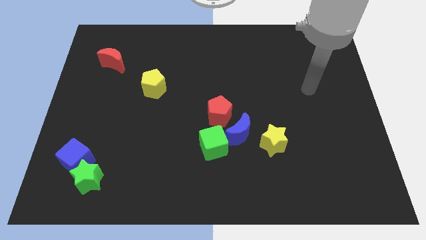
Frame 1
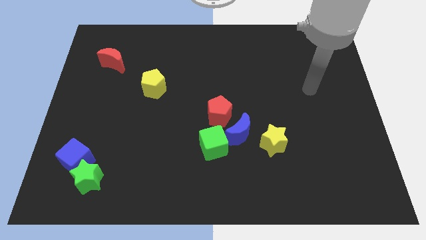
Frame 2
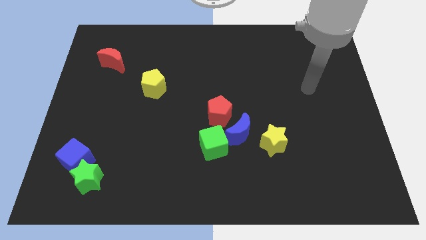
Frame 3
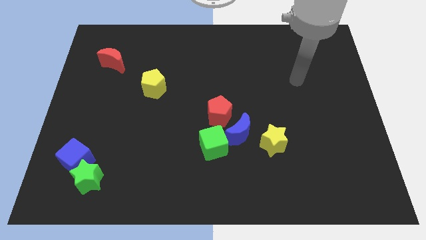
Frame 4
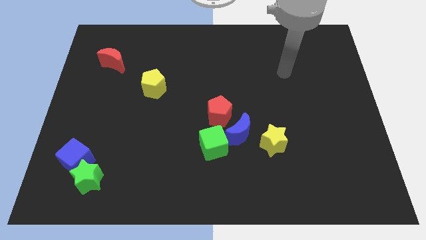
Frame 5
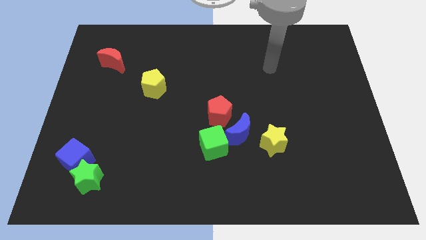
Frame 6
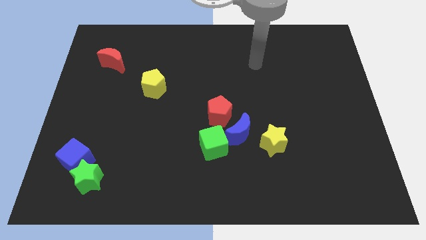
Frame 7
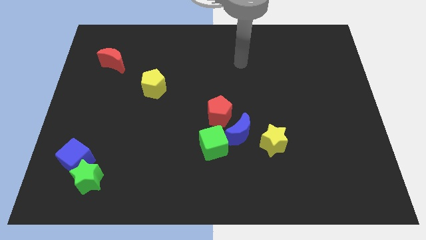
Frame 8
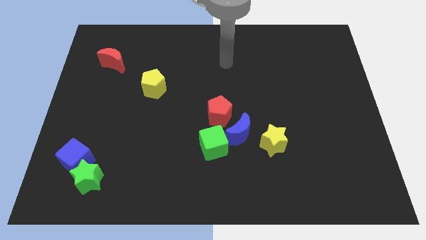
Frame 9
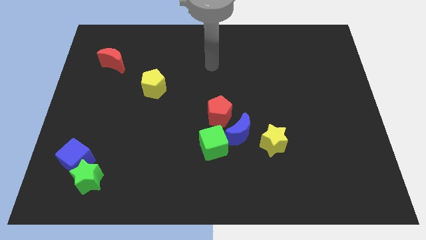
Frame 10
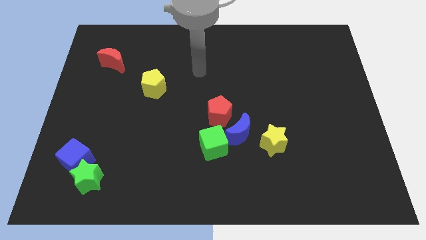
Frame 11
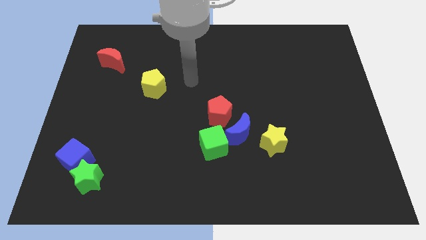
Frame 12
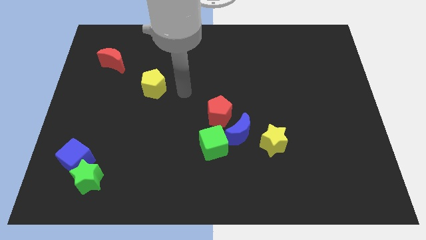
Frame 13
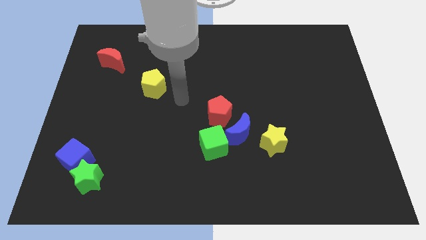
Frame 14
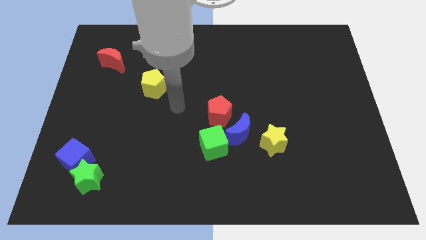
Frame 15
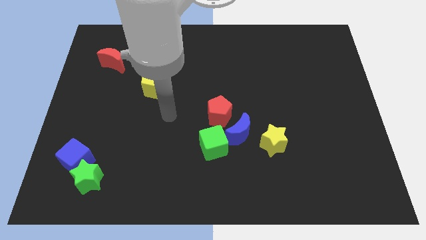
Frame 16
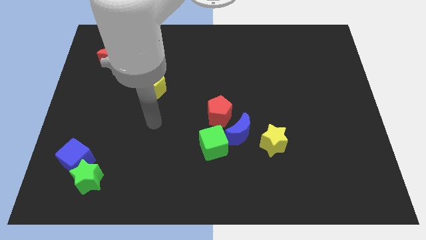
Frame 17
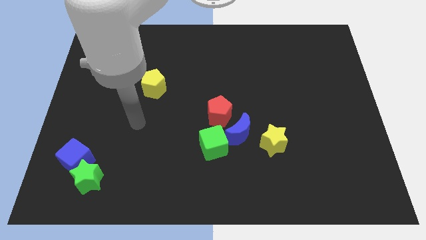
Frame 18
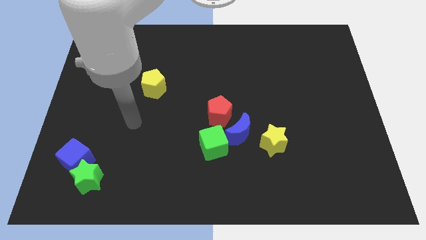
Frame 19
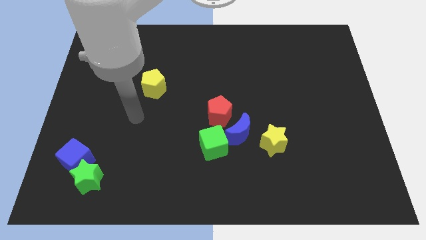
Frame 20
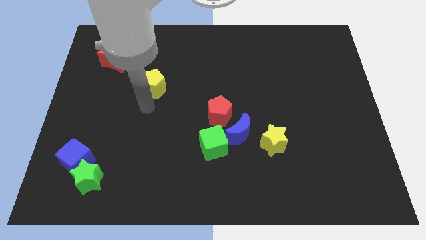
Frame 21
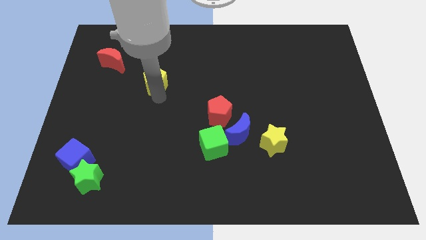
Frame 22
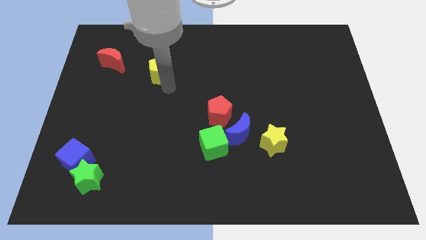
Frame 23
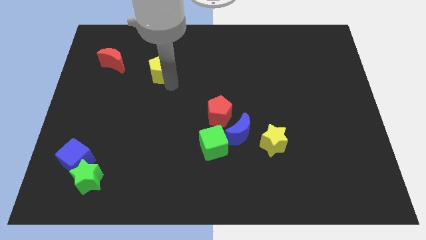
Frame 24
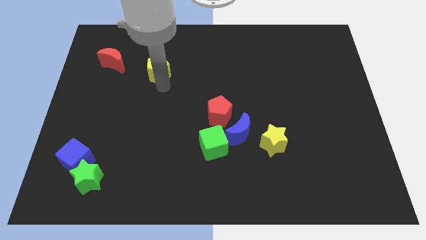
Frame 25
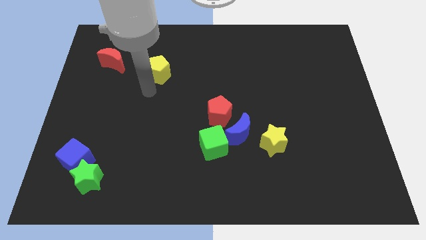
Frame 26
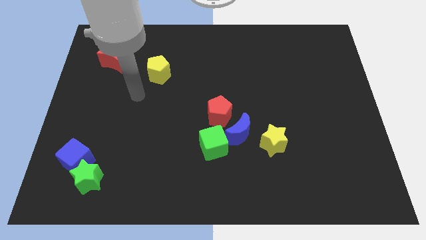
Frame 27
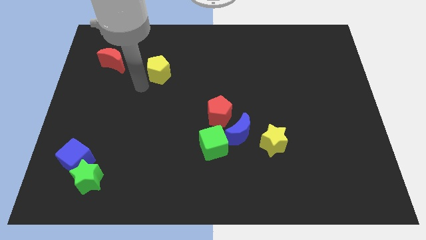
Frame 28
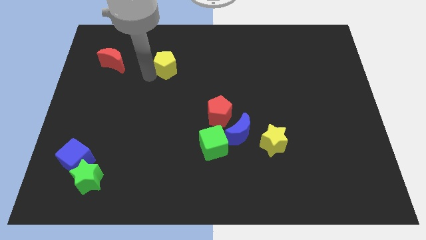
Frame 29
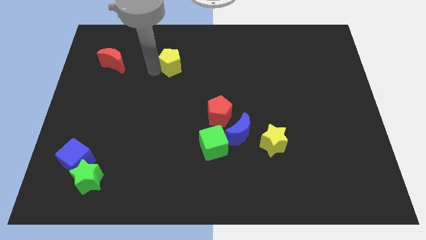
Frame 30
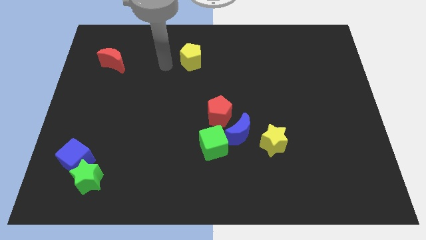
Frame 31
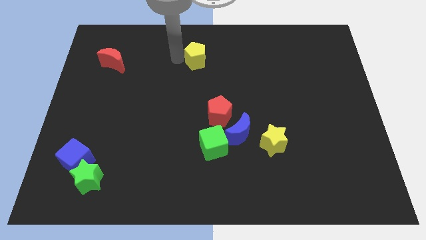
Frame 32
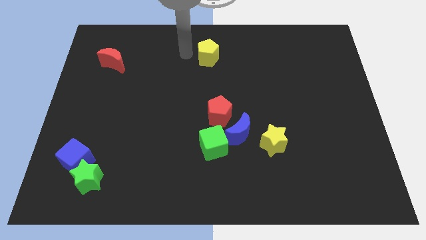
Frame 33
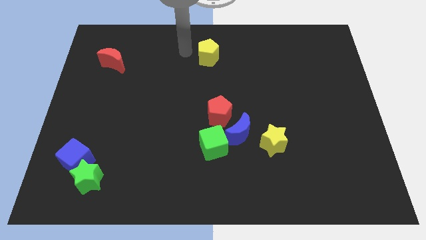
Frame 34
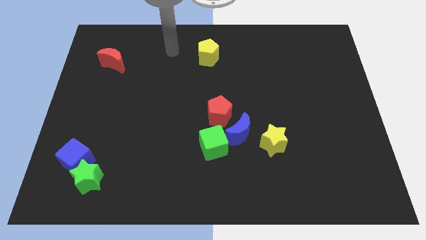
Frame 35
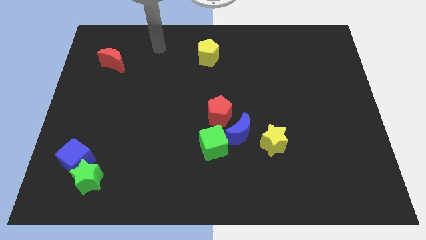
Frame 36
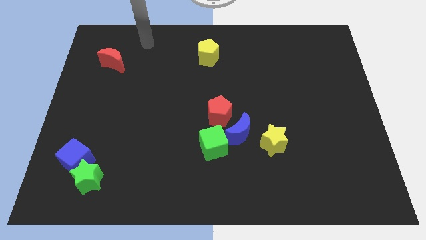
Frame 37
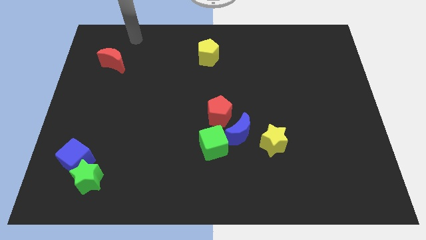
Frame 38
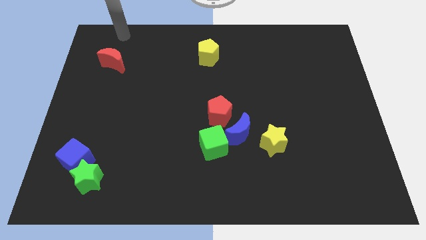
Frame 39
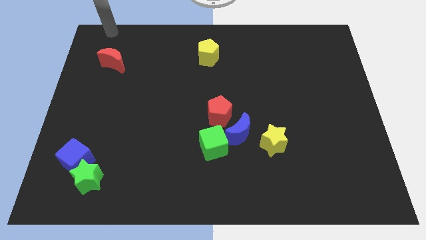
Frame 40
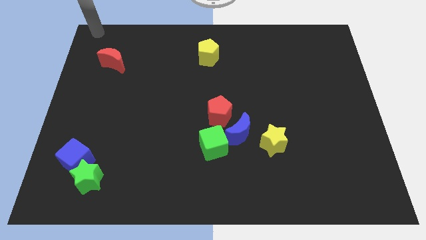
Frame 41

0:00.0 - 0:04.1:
move the yellow pentagon to the top center of the board

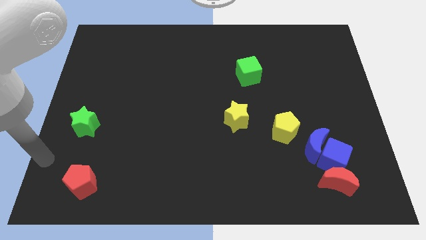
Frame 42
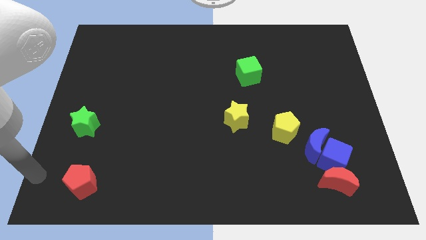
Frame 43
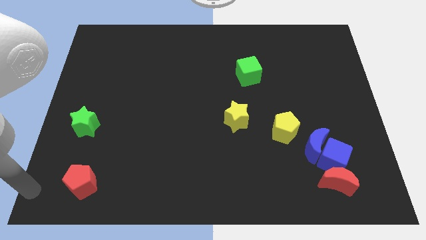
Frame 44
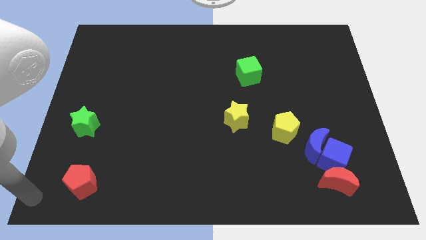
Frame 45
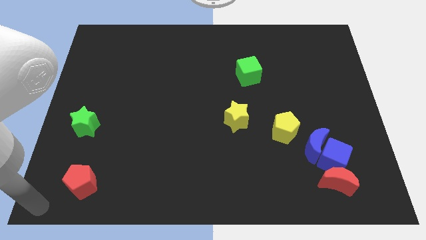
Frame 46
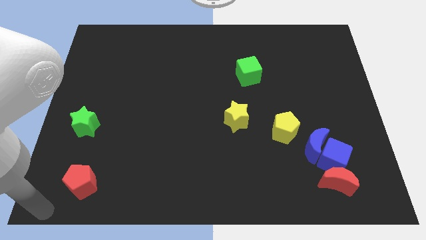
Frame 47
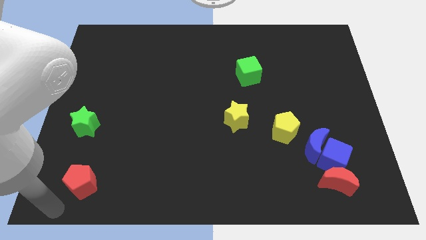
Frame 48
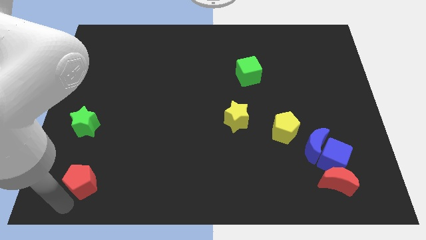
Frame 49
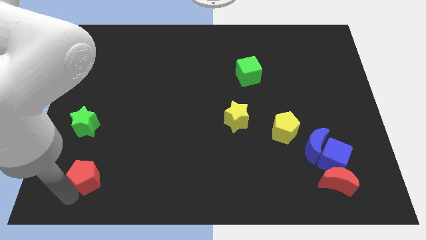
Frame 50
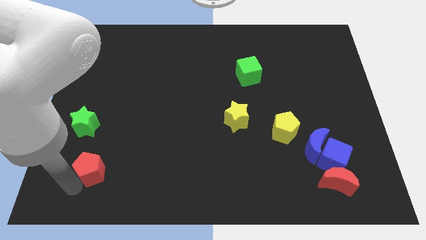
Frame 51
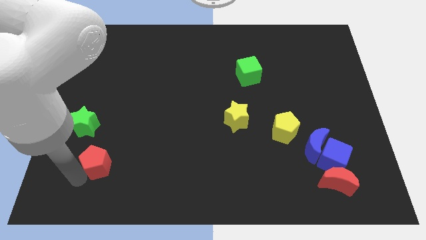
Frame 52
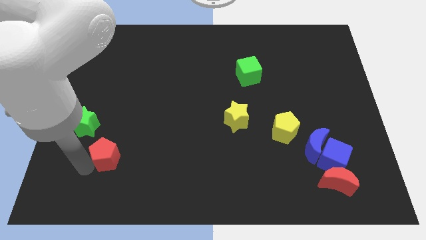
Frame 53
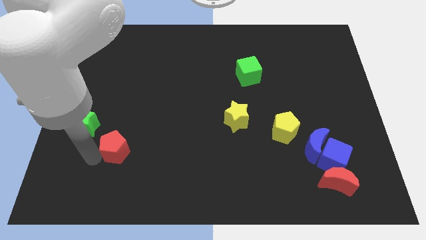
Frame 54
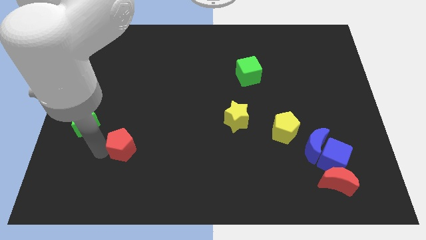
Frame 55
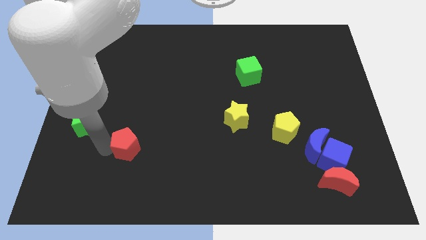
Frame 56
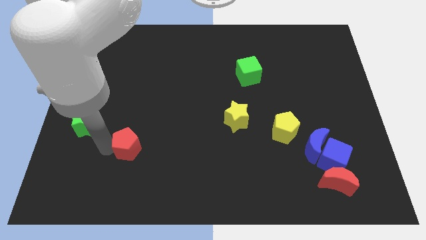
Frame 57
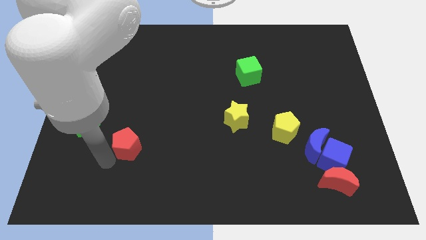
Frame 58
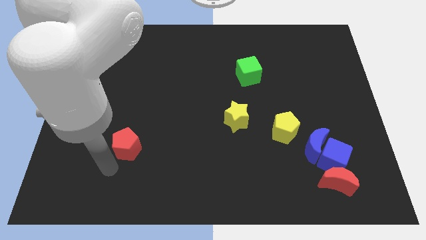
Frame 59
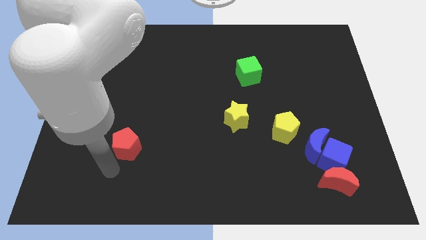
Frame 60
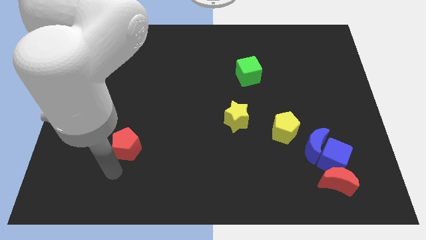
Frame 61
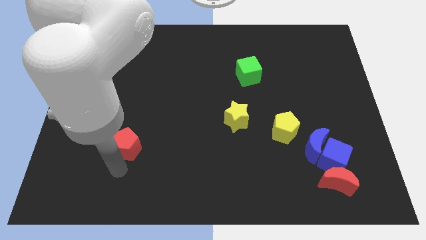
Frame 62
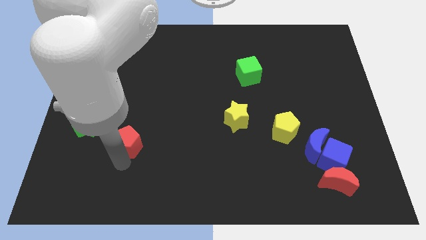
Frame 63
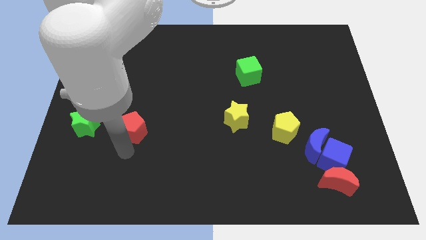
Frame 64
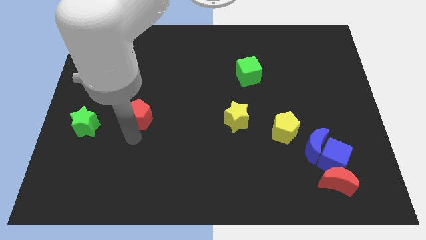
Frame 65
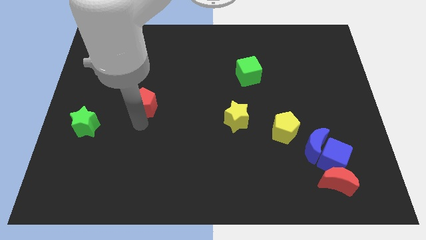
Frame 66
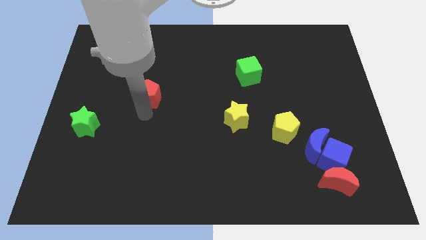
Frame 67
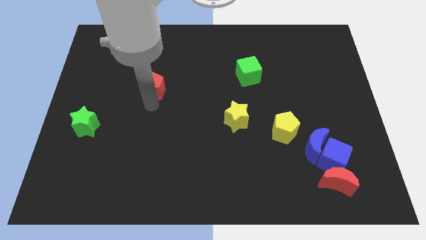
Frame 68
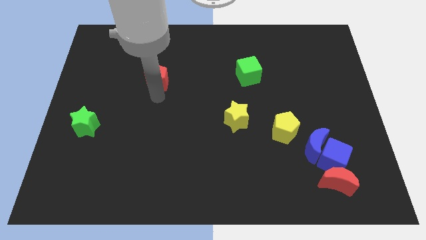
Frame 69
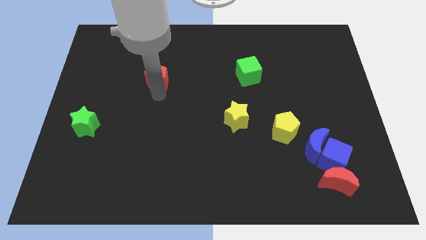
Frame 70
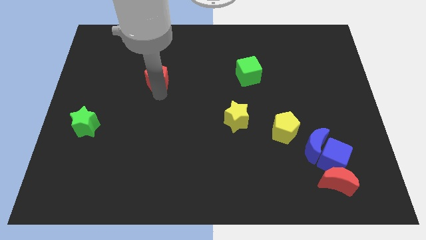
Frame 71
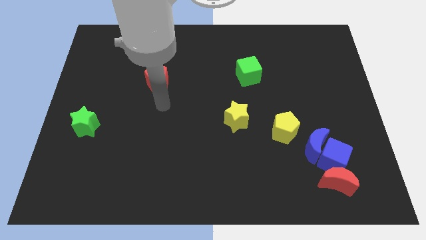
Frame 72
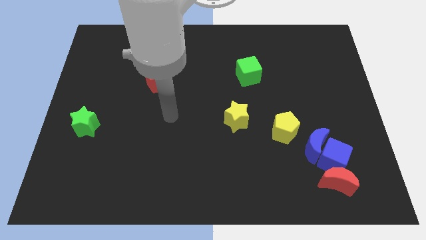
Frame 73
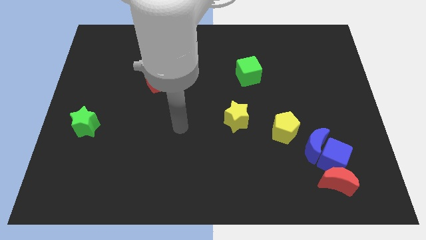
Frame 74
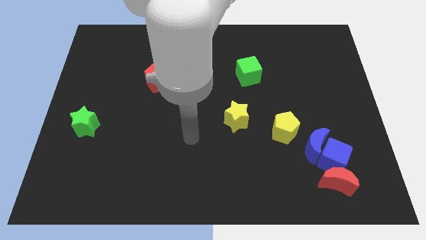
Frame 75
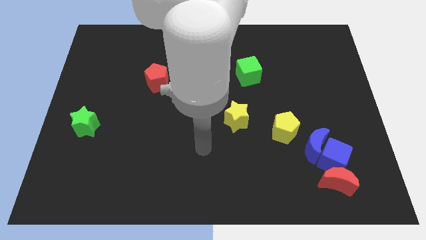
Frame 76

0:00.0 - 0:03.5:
place red pentagon to the left of green cube

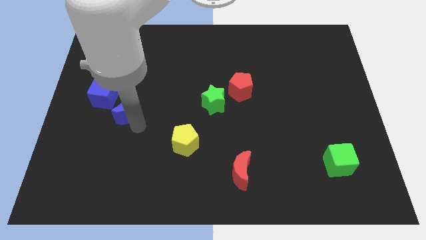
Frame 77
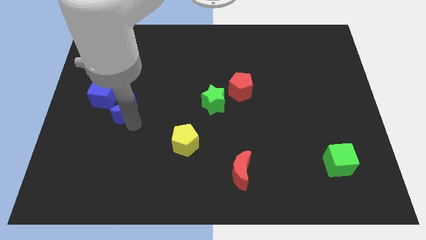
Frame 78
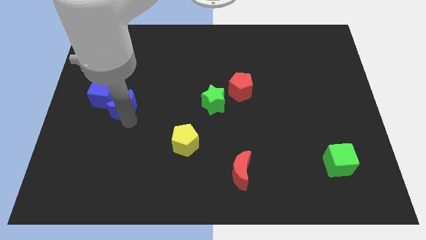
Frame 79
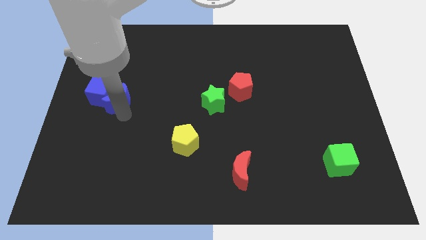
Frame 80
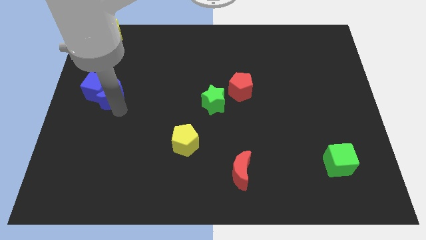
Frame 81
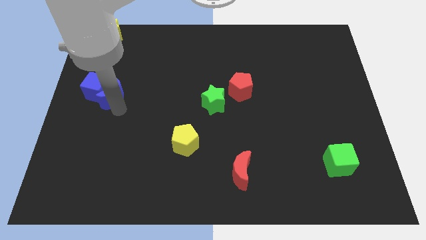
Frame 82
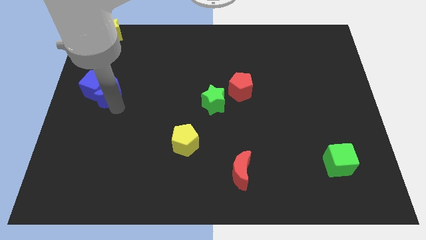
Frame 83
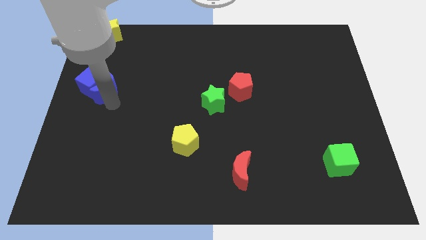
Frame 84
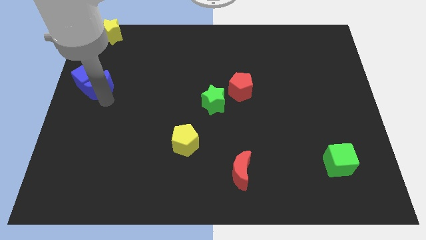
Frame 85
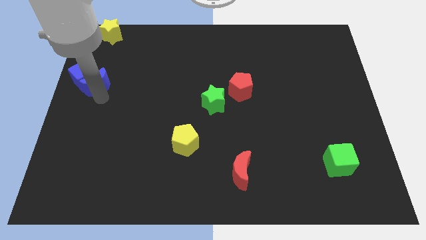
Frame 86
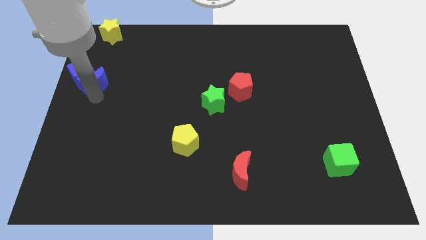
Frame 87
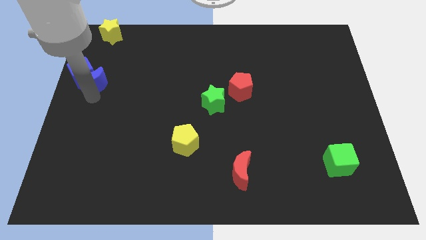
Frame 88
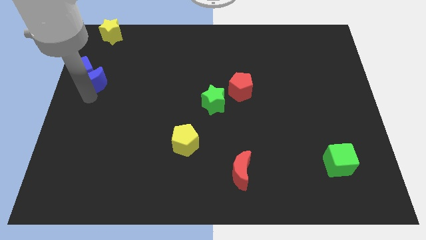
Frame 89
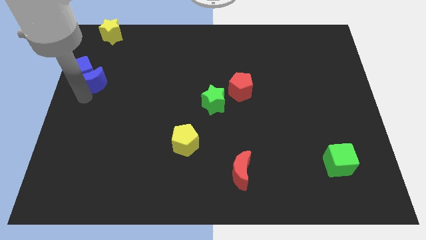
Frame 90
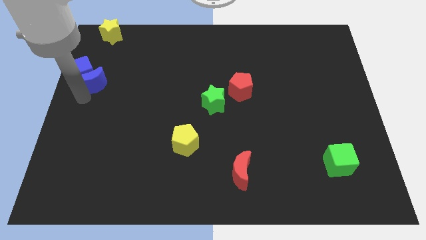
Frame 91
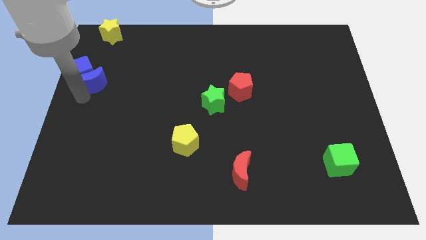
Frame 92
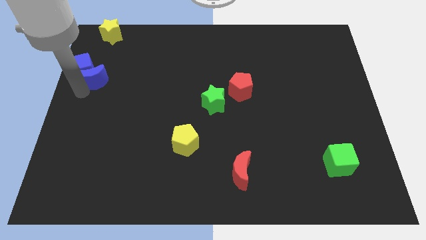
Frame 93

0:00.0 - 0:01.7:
push the blue blocks towards the top left of the board
